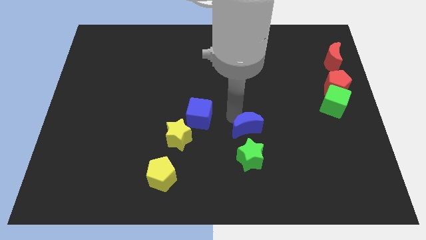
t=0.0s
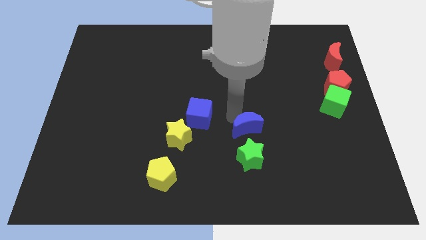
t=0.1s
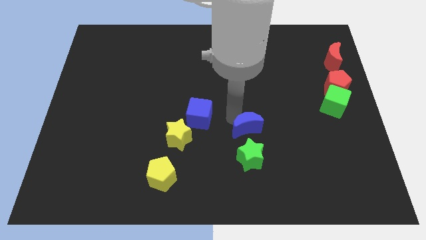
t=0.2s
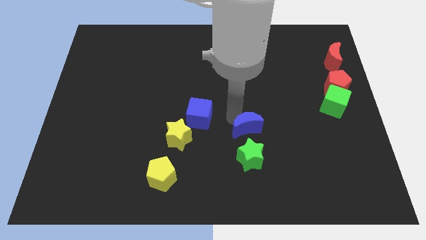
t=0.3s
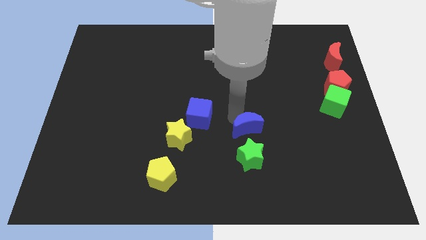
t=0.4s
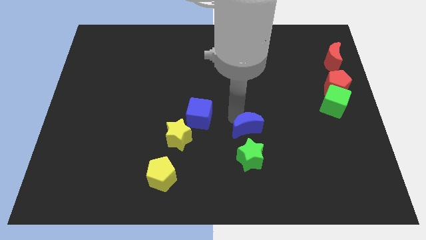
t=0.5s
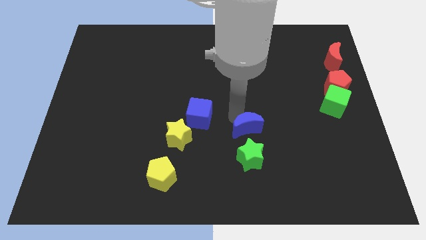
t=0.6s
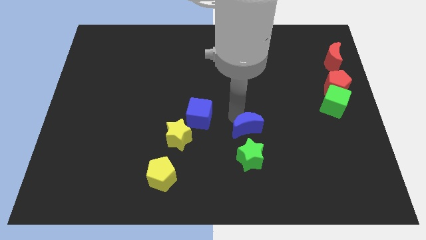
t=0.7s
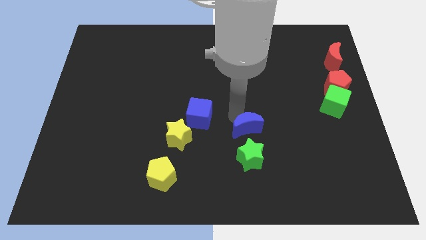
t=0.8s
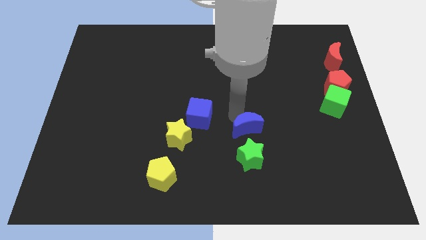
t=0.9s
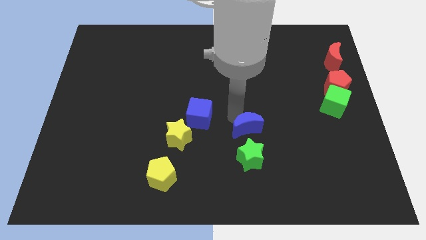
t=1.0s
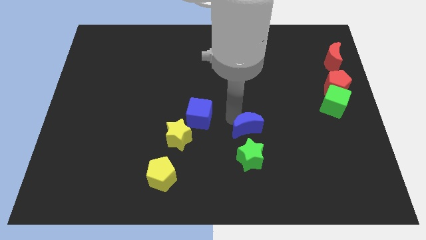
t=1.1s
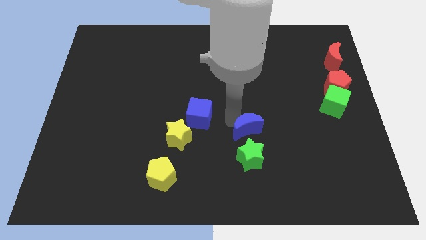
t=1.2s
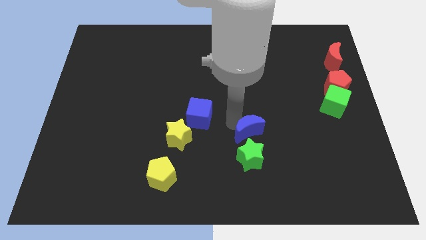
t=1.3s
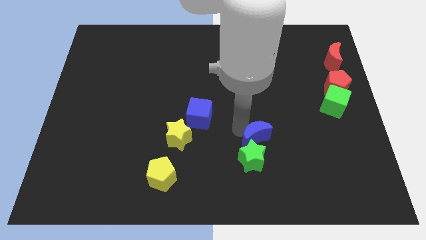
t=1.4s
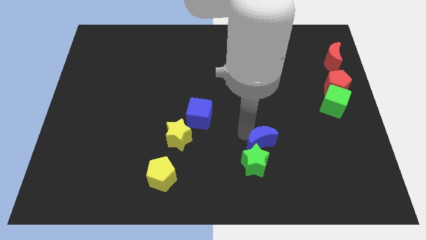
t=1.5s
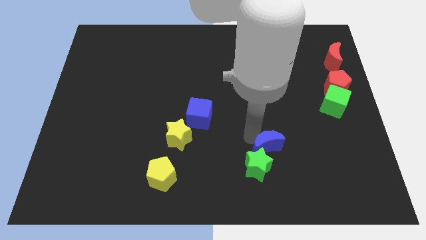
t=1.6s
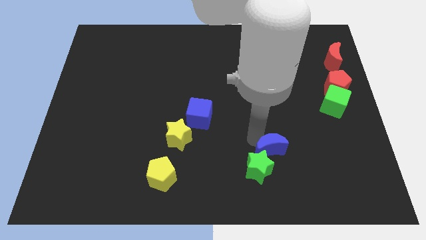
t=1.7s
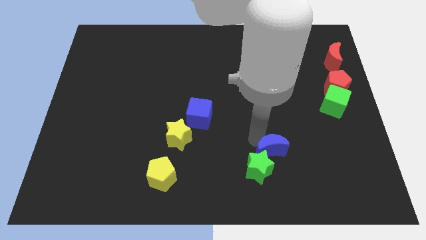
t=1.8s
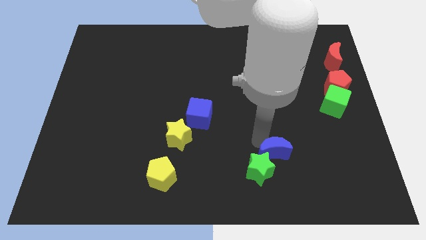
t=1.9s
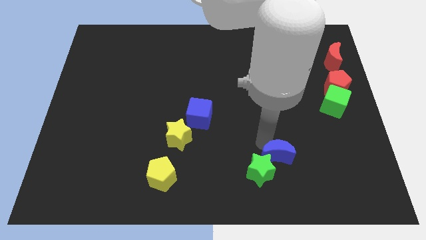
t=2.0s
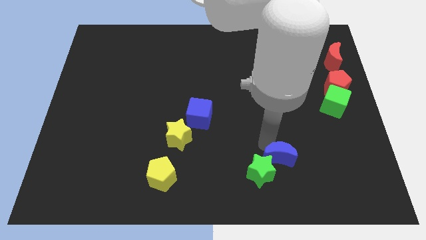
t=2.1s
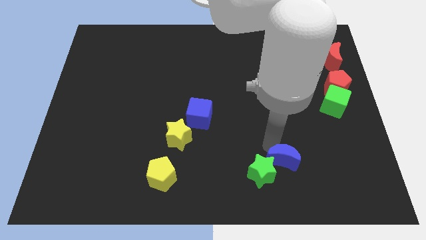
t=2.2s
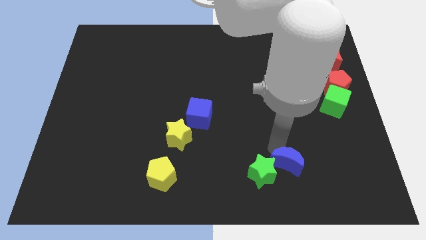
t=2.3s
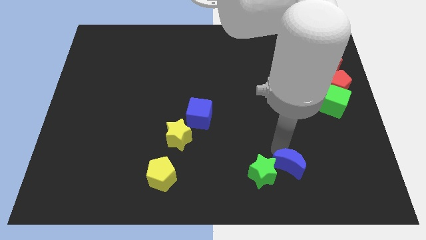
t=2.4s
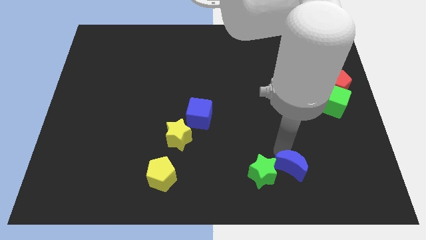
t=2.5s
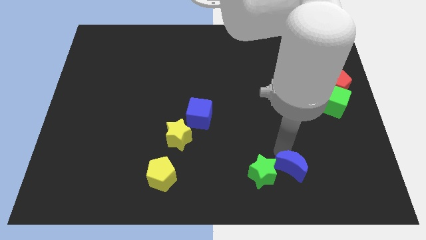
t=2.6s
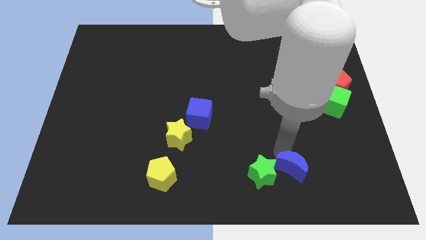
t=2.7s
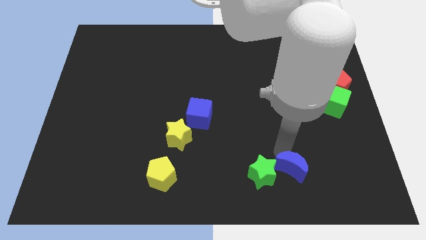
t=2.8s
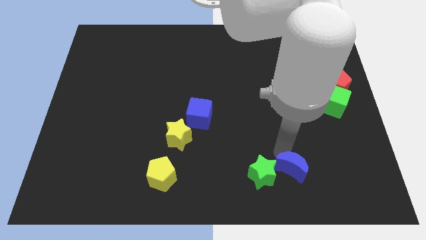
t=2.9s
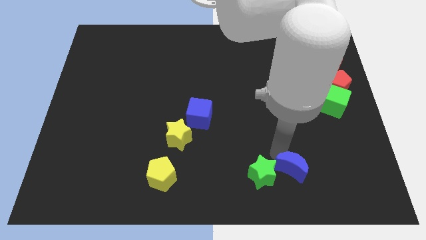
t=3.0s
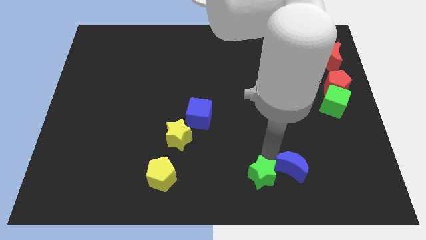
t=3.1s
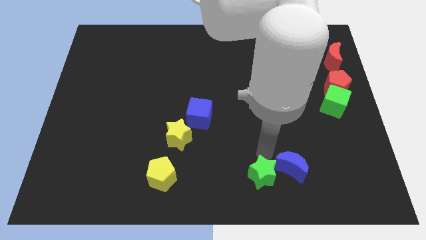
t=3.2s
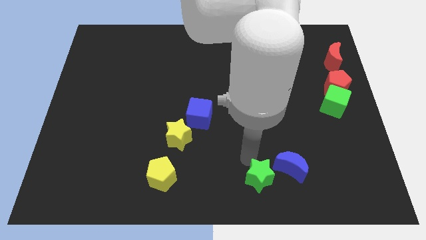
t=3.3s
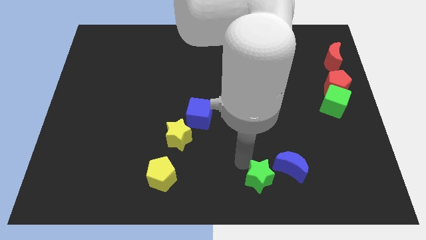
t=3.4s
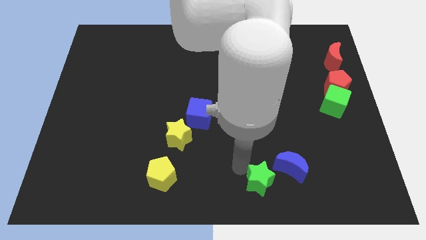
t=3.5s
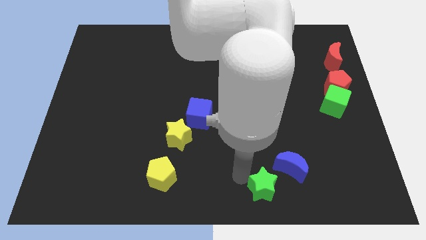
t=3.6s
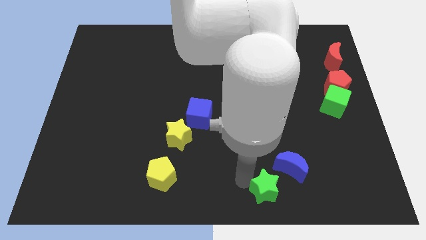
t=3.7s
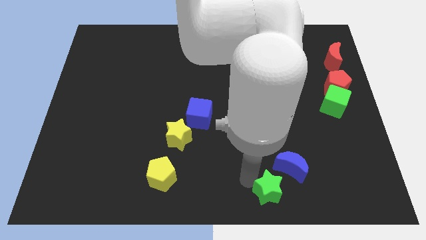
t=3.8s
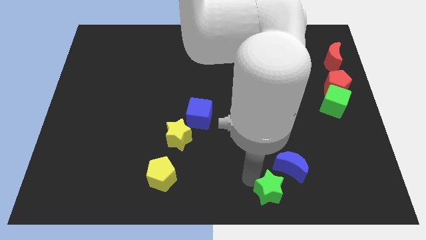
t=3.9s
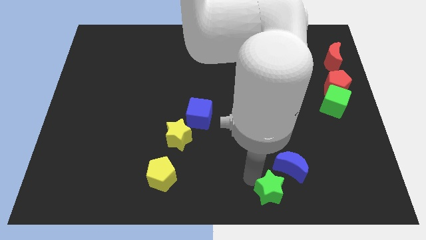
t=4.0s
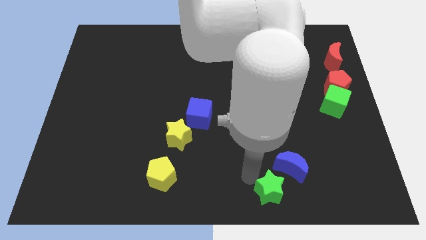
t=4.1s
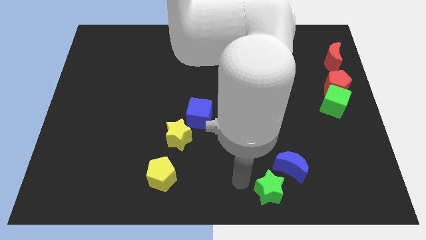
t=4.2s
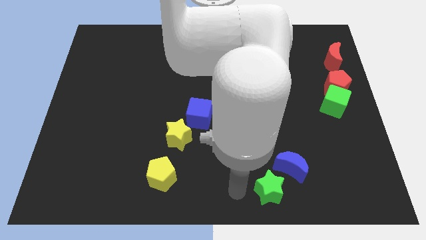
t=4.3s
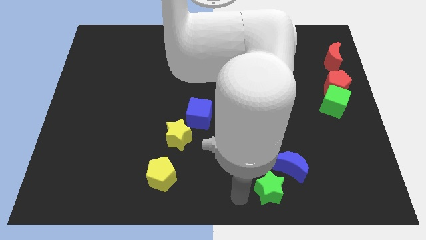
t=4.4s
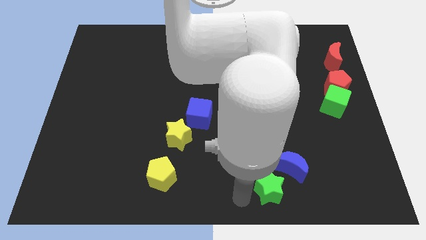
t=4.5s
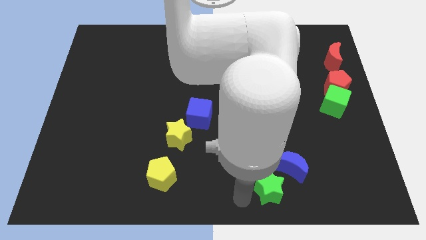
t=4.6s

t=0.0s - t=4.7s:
slide the green star and blue moon horizontally to the right side of the yellow pentagon

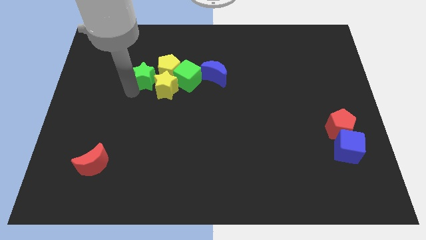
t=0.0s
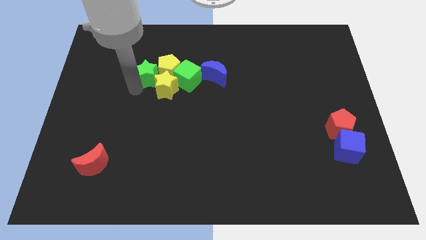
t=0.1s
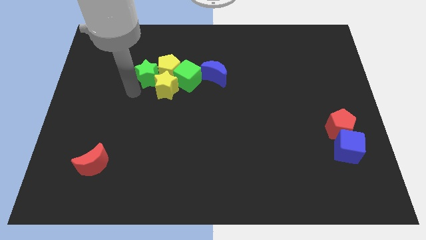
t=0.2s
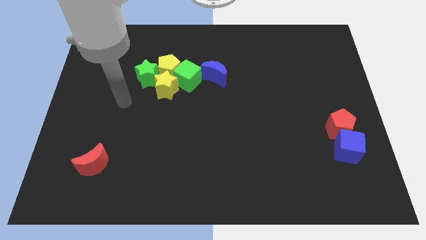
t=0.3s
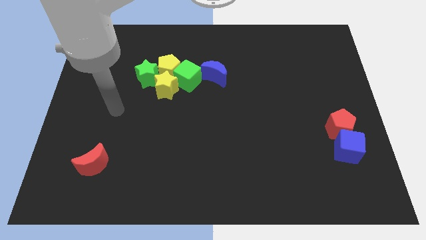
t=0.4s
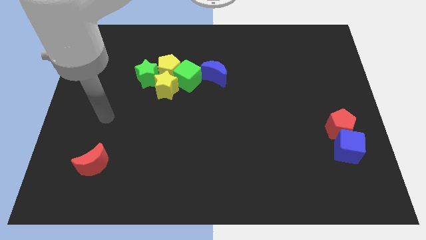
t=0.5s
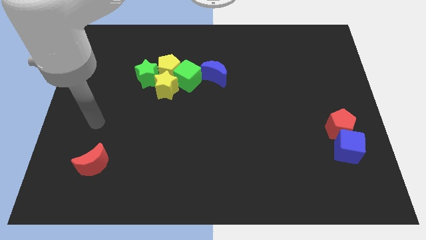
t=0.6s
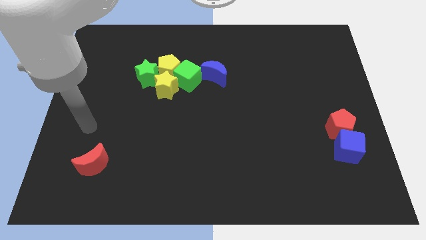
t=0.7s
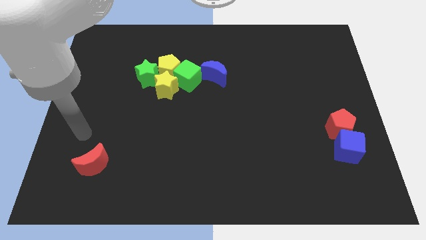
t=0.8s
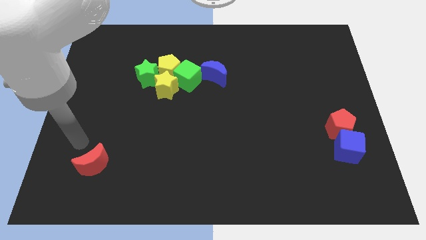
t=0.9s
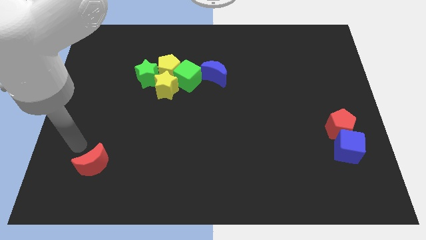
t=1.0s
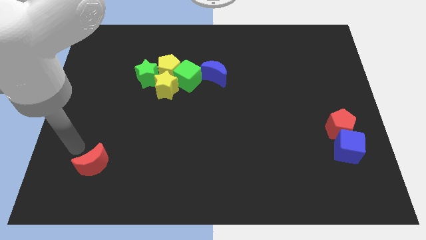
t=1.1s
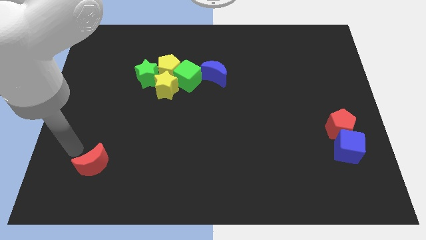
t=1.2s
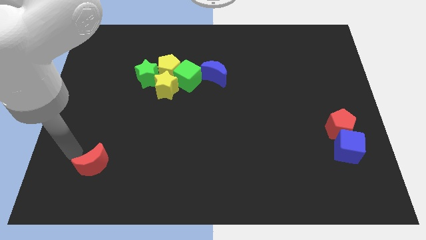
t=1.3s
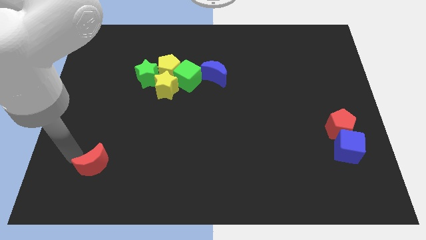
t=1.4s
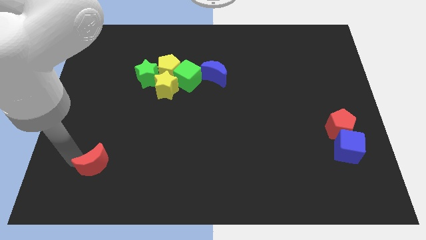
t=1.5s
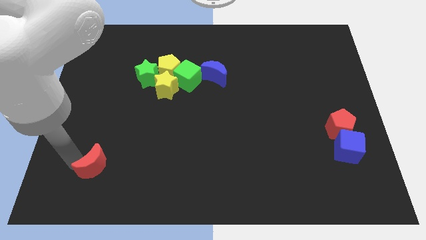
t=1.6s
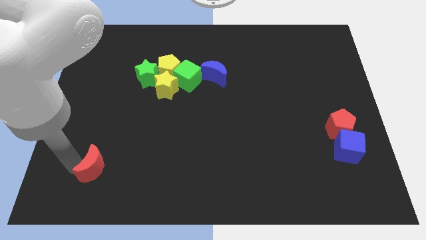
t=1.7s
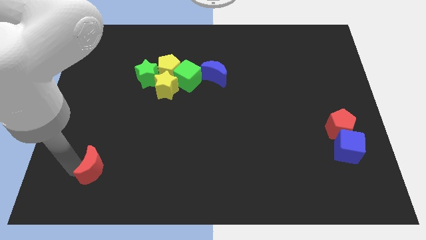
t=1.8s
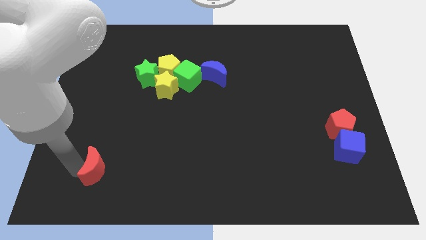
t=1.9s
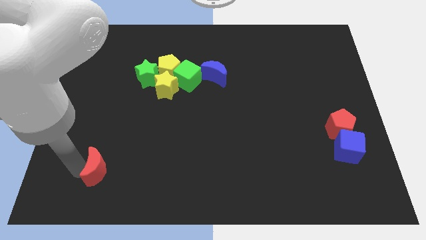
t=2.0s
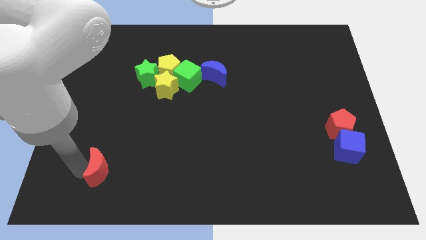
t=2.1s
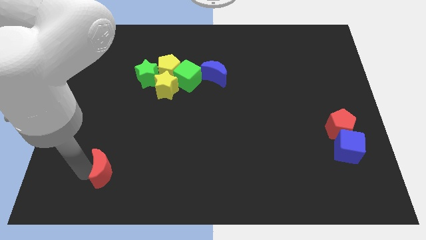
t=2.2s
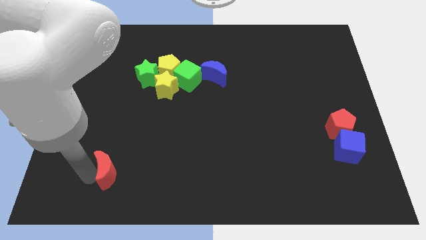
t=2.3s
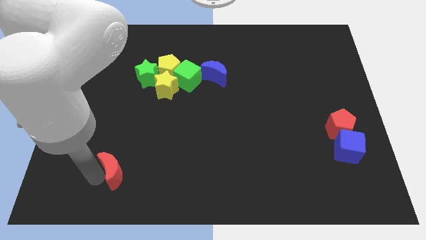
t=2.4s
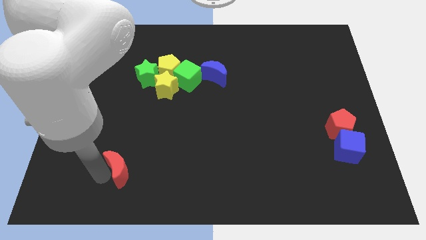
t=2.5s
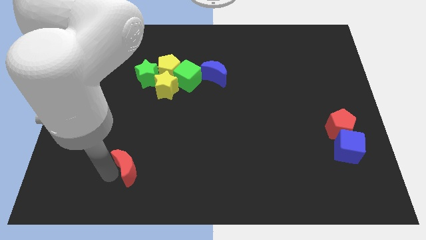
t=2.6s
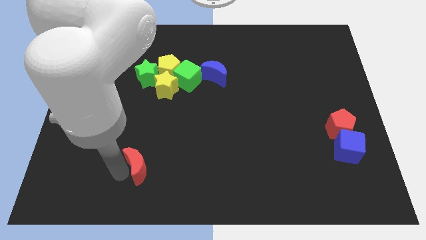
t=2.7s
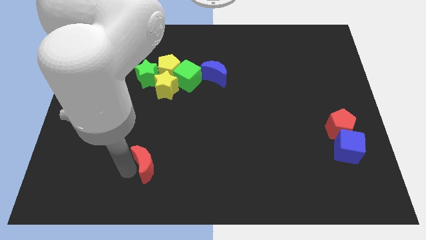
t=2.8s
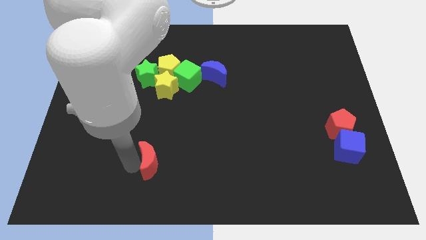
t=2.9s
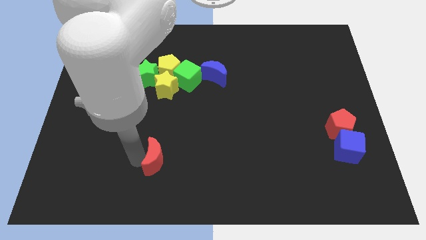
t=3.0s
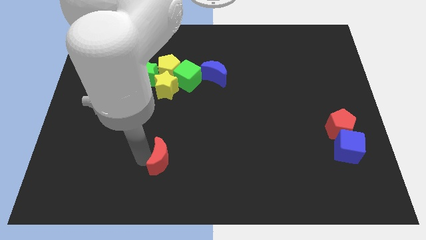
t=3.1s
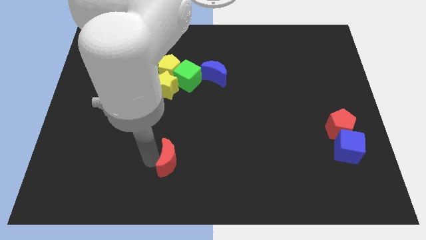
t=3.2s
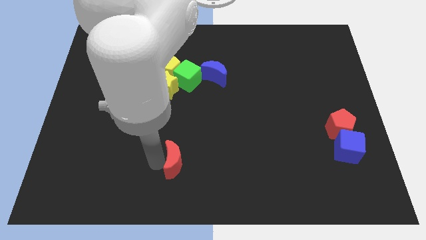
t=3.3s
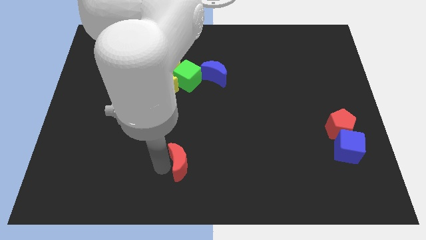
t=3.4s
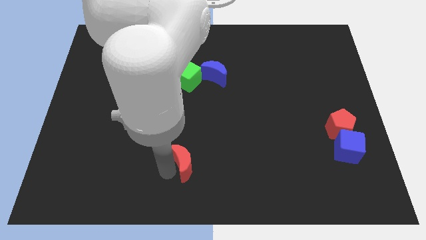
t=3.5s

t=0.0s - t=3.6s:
move the red moon towards the bottom center side of the board

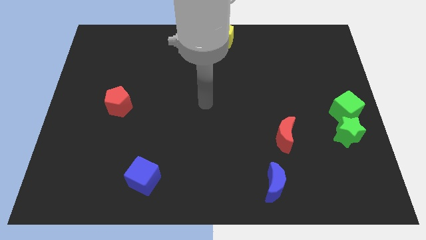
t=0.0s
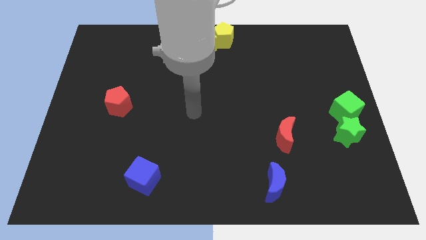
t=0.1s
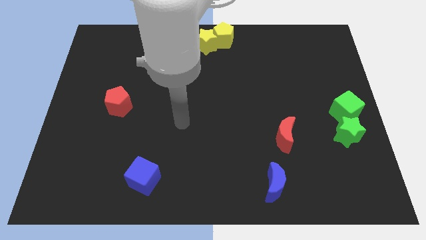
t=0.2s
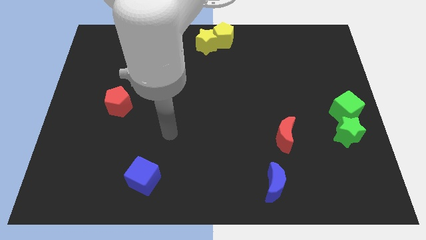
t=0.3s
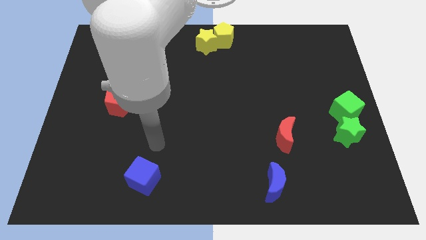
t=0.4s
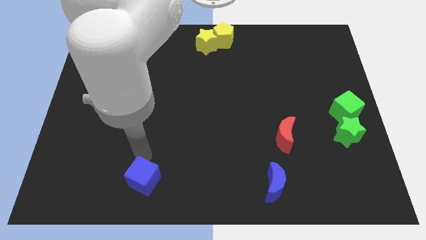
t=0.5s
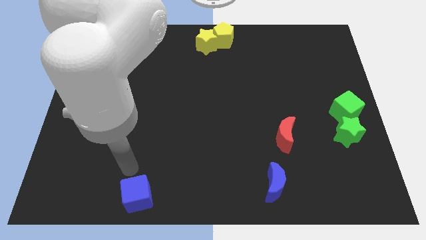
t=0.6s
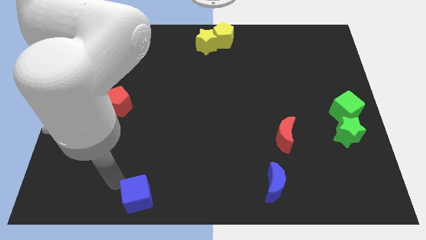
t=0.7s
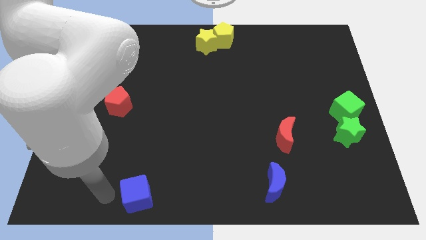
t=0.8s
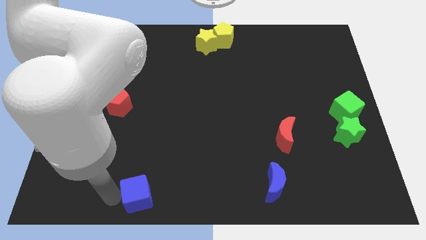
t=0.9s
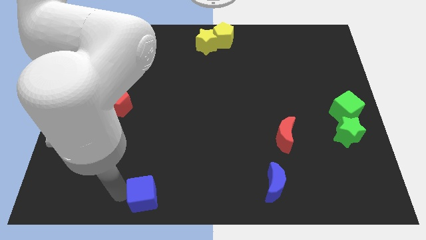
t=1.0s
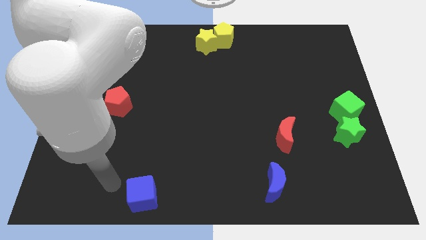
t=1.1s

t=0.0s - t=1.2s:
push the blue cube downward
